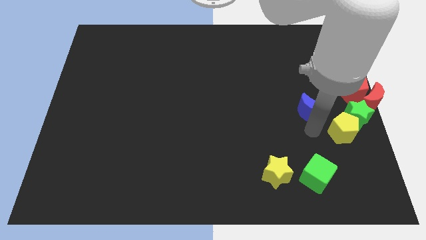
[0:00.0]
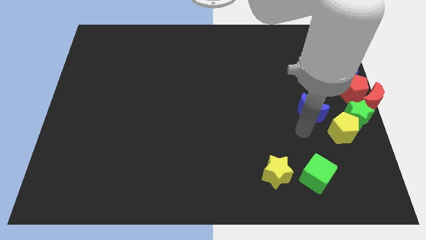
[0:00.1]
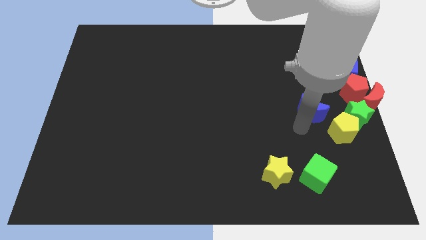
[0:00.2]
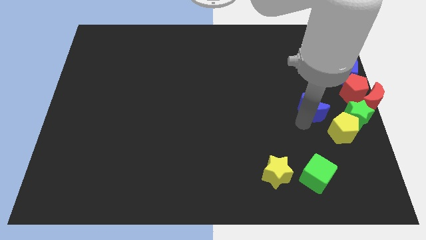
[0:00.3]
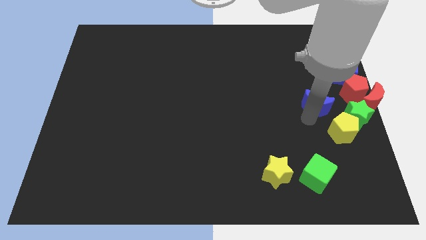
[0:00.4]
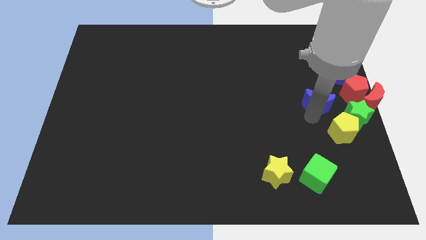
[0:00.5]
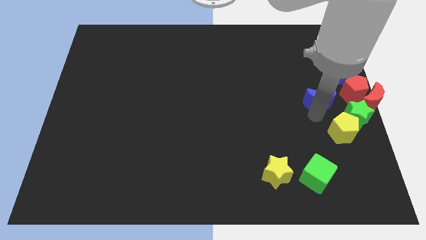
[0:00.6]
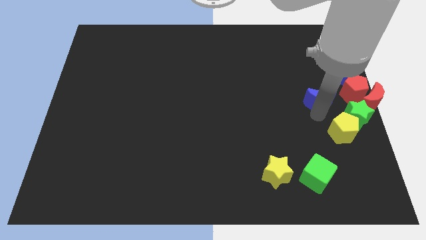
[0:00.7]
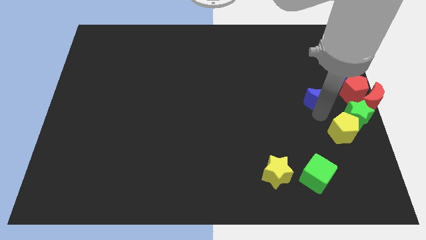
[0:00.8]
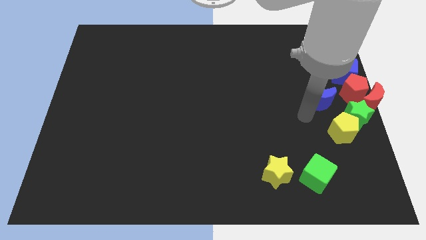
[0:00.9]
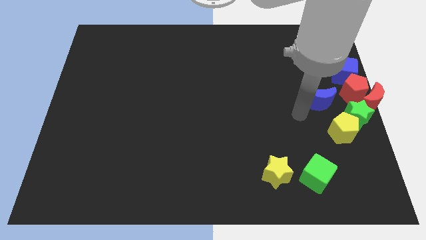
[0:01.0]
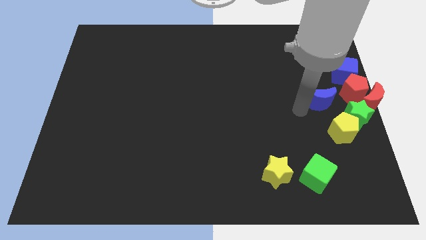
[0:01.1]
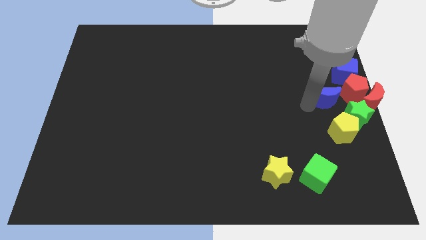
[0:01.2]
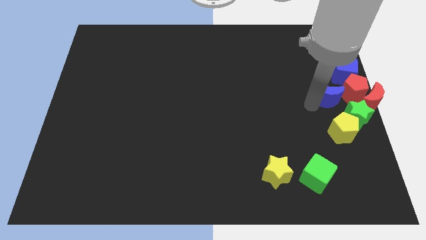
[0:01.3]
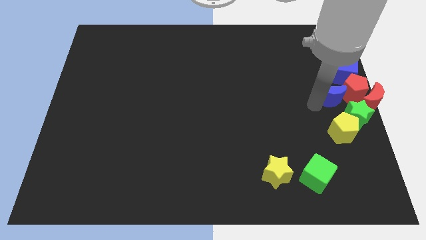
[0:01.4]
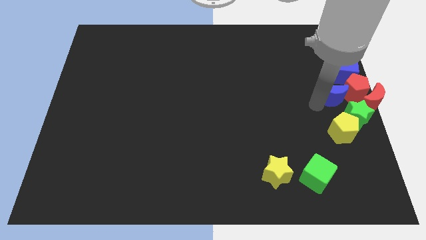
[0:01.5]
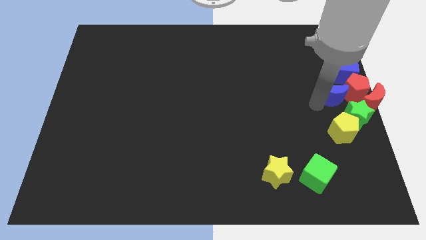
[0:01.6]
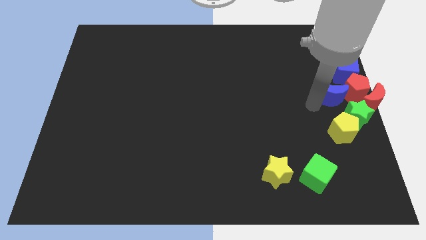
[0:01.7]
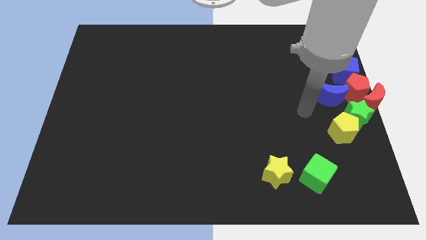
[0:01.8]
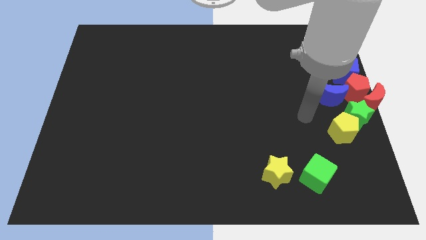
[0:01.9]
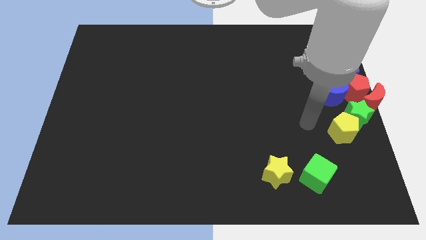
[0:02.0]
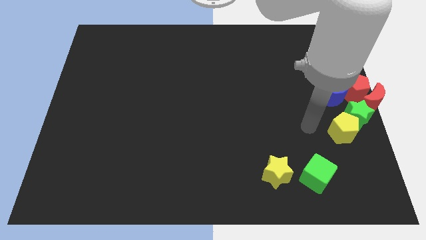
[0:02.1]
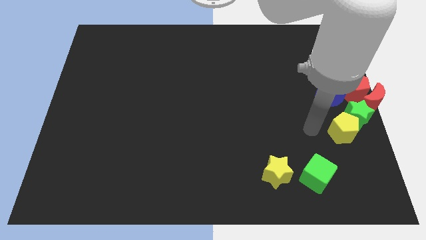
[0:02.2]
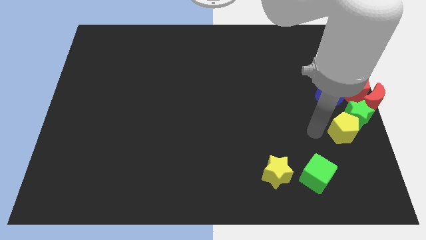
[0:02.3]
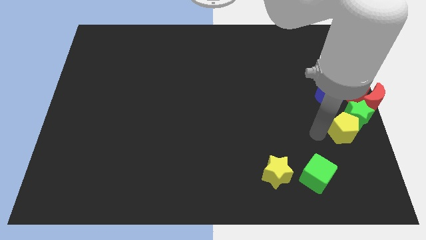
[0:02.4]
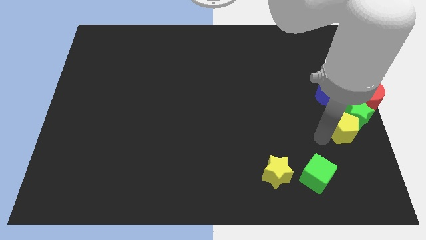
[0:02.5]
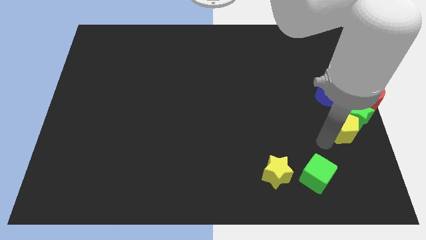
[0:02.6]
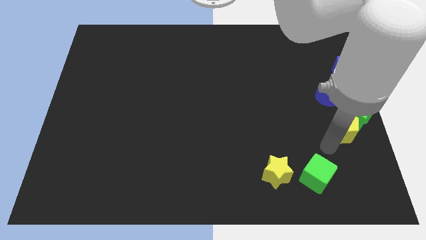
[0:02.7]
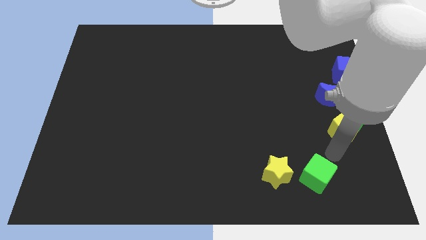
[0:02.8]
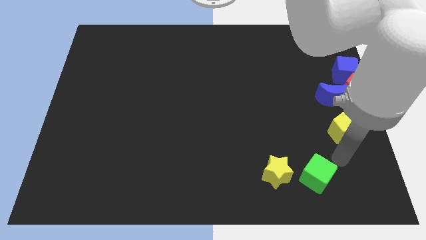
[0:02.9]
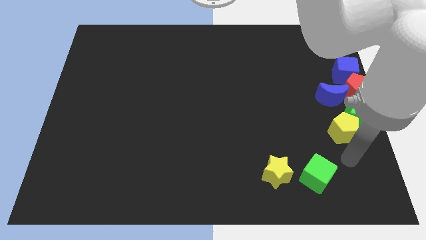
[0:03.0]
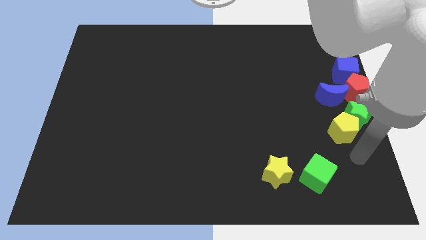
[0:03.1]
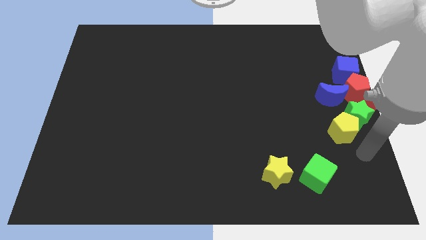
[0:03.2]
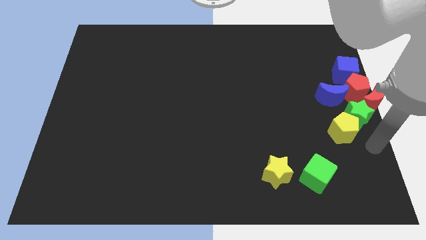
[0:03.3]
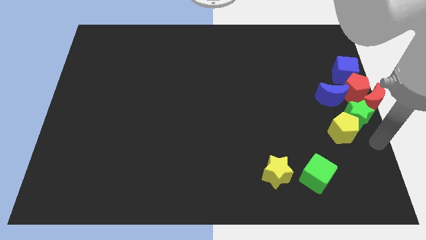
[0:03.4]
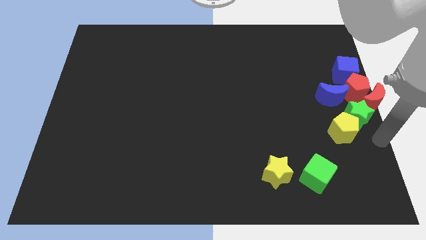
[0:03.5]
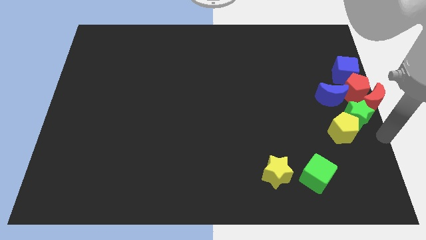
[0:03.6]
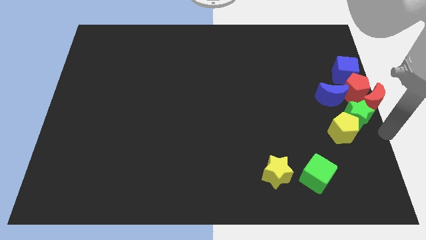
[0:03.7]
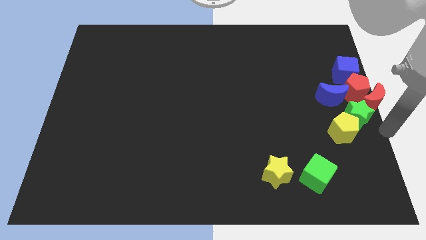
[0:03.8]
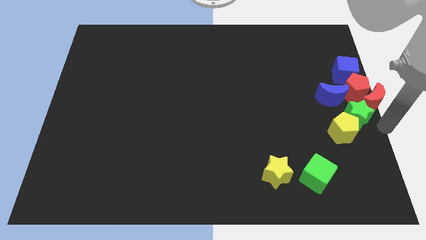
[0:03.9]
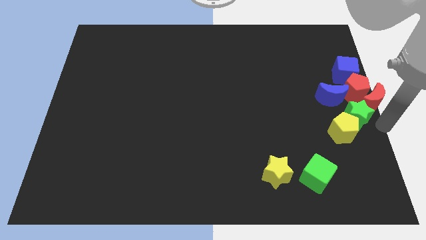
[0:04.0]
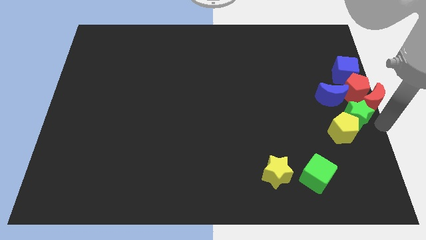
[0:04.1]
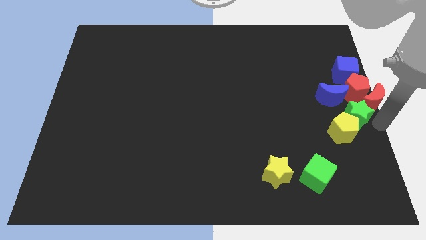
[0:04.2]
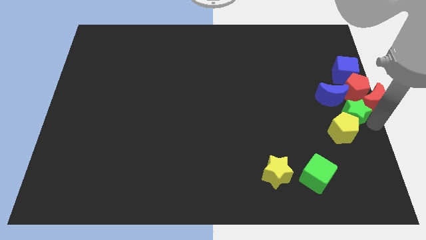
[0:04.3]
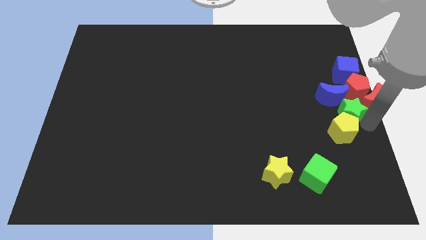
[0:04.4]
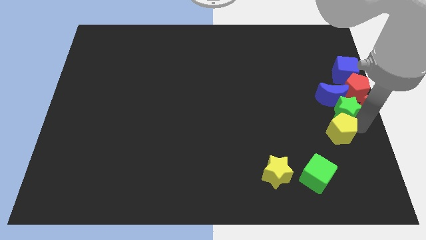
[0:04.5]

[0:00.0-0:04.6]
move green star below blue moon

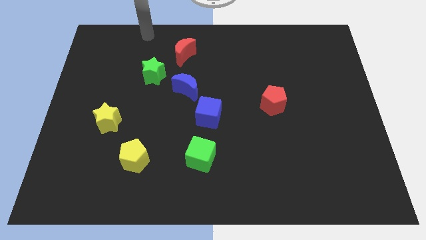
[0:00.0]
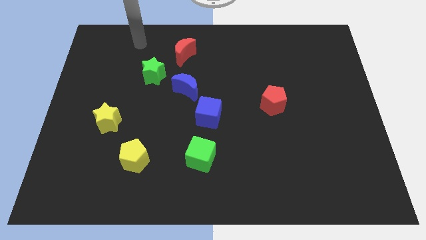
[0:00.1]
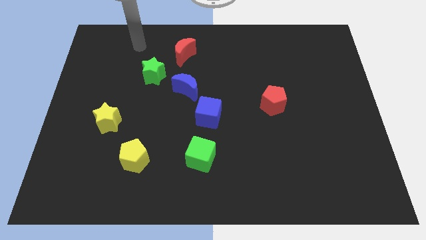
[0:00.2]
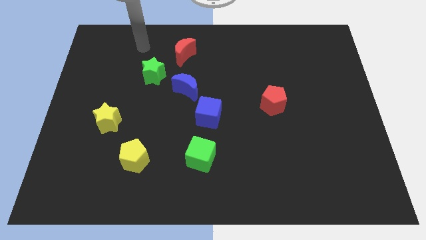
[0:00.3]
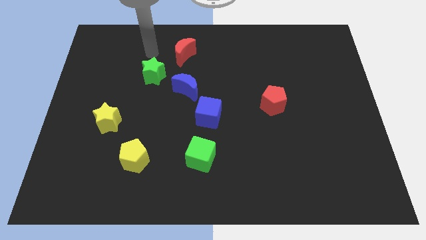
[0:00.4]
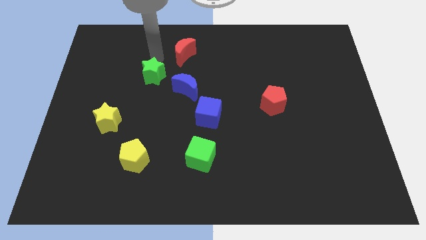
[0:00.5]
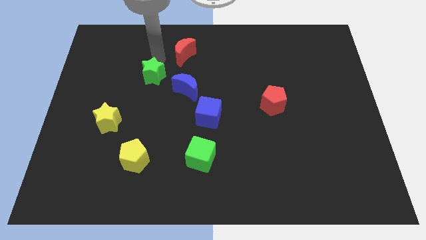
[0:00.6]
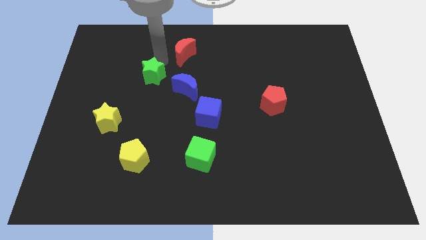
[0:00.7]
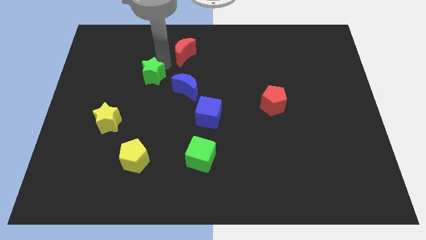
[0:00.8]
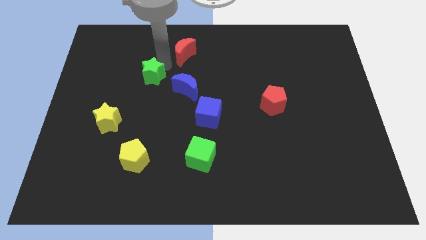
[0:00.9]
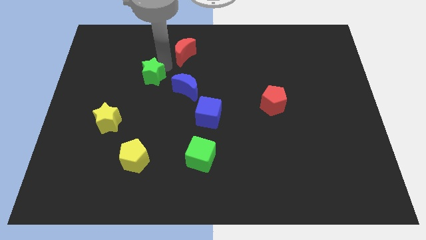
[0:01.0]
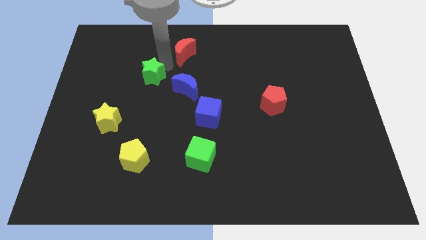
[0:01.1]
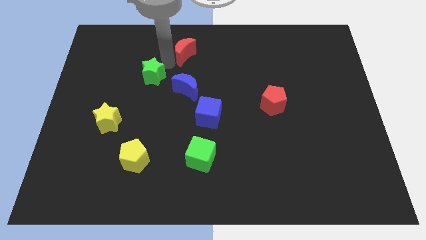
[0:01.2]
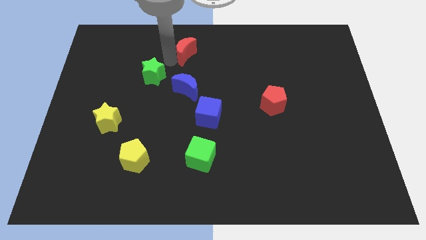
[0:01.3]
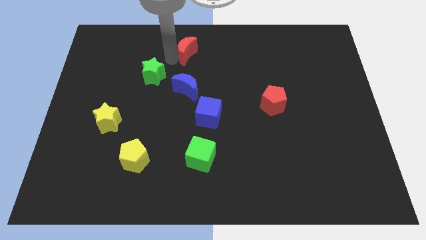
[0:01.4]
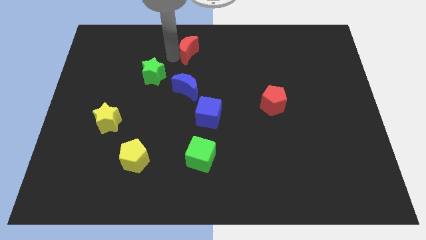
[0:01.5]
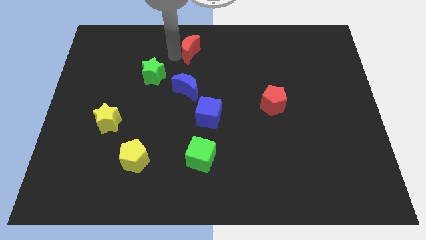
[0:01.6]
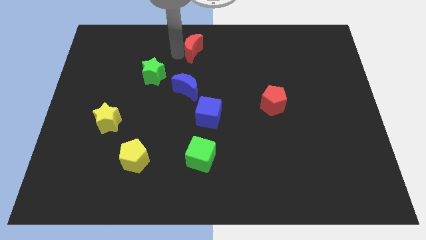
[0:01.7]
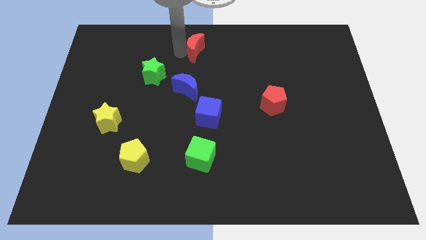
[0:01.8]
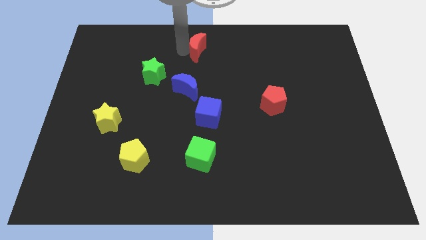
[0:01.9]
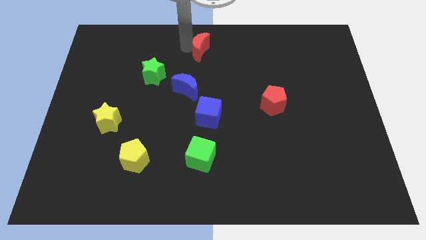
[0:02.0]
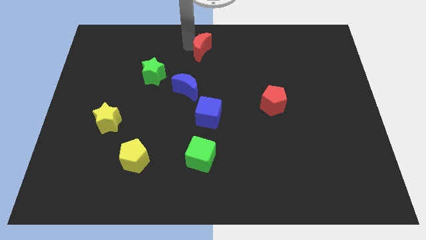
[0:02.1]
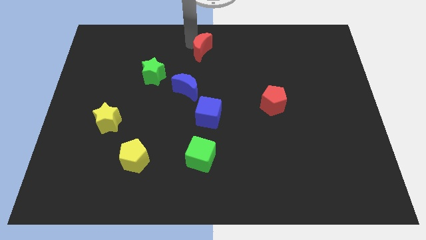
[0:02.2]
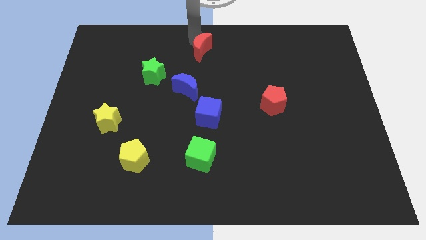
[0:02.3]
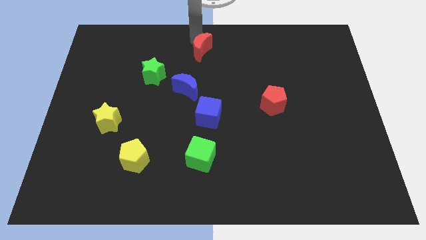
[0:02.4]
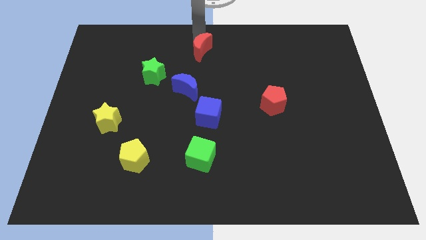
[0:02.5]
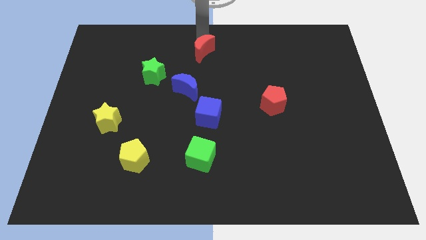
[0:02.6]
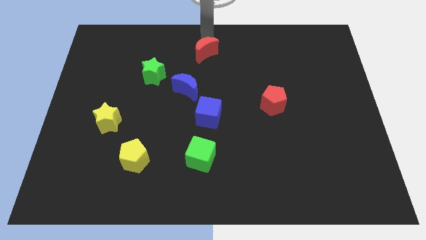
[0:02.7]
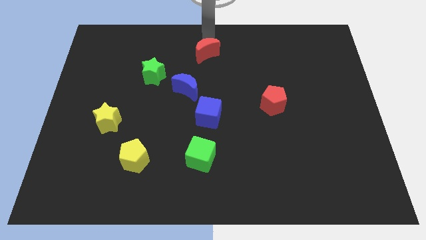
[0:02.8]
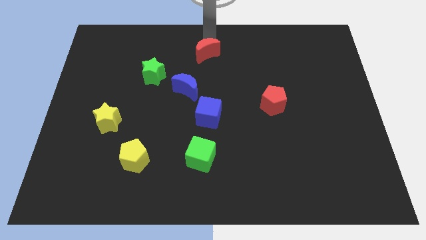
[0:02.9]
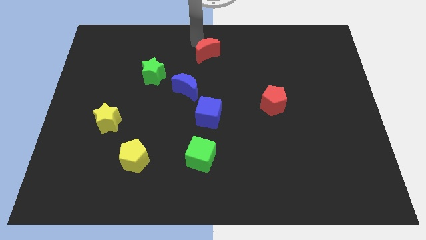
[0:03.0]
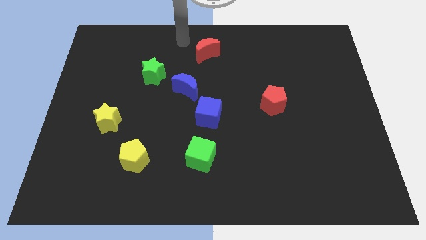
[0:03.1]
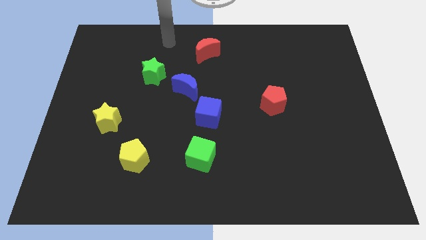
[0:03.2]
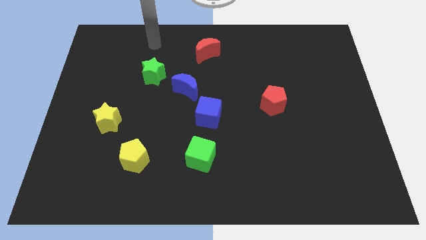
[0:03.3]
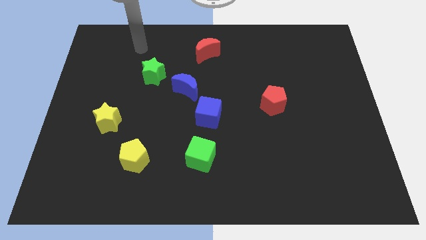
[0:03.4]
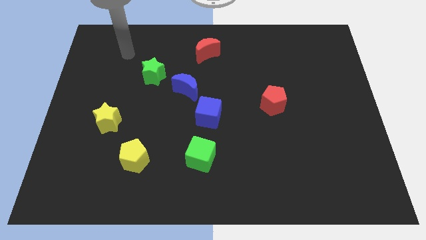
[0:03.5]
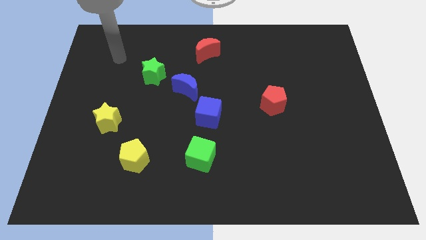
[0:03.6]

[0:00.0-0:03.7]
place the red crescent vertically parallel to the blue cube

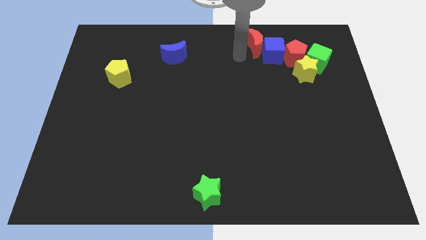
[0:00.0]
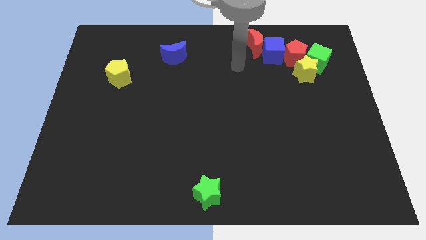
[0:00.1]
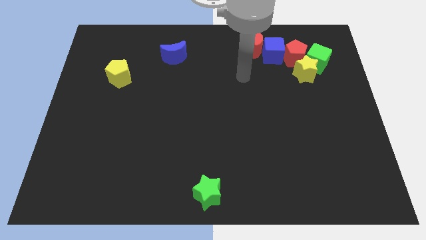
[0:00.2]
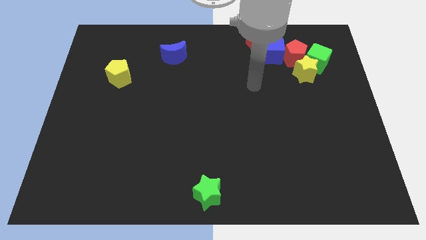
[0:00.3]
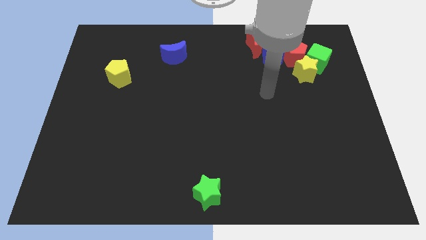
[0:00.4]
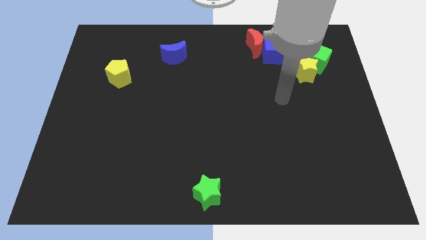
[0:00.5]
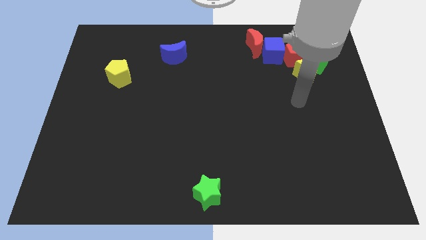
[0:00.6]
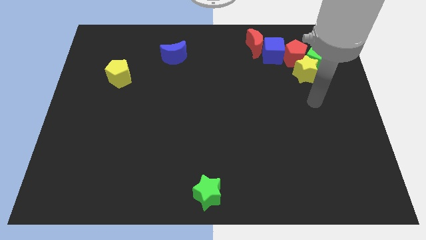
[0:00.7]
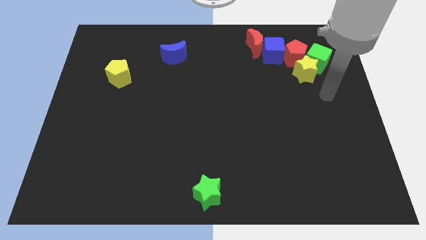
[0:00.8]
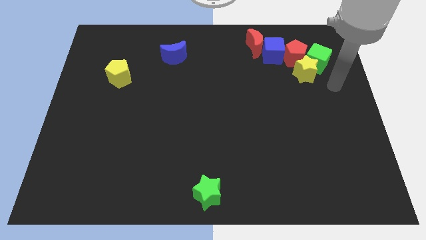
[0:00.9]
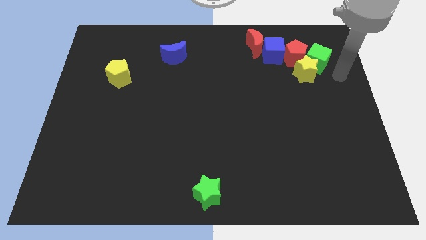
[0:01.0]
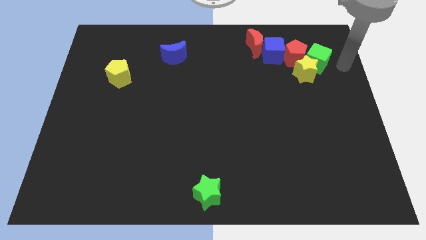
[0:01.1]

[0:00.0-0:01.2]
move your arm towards the green cube
